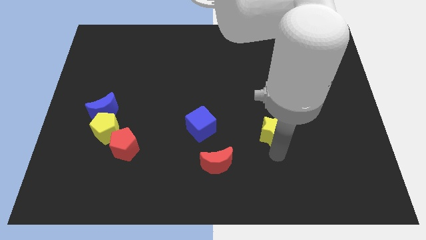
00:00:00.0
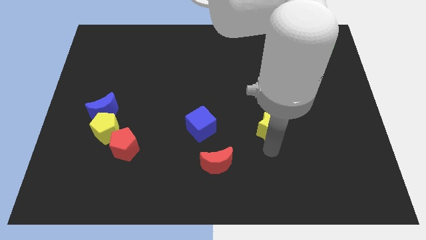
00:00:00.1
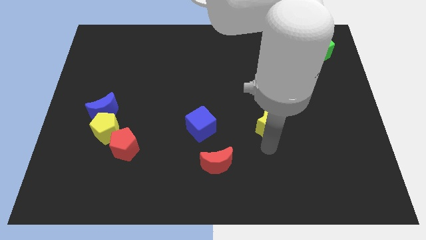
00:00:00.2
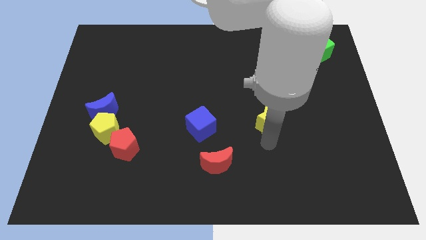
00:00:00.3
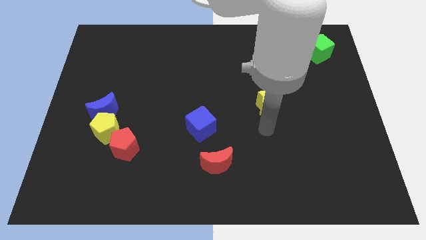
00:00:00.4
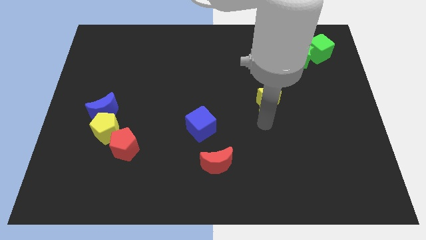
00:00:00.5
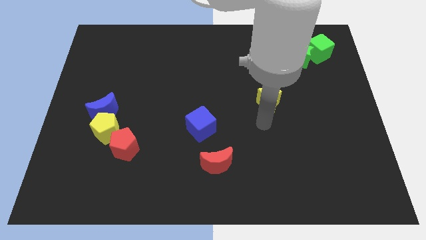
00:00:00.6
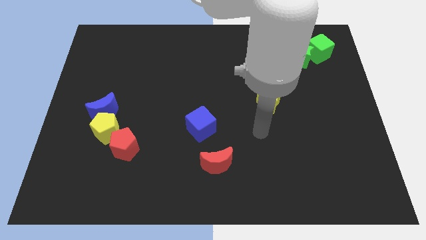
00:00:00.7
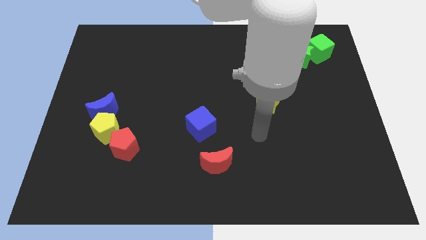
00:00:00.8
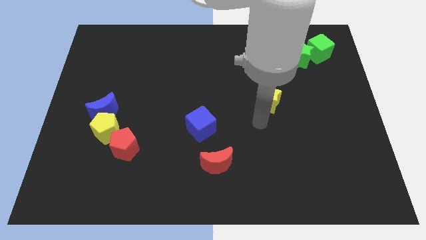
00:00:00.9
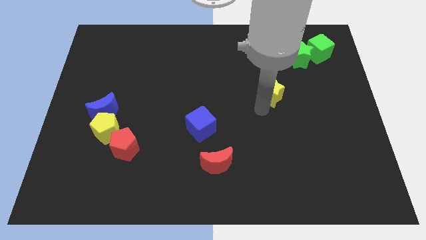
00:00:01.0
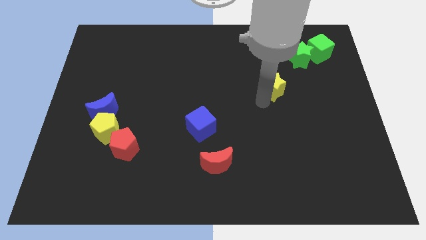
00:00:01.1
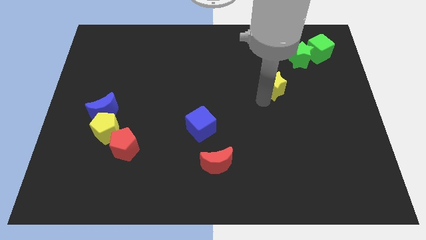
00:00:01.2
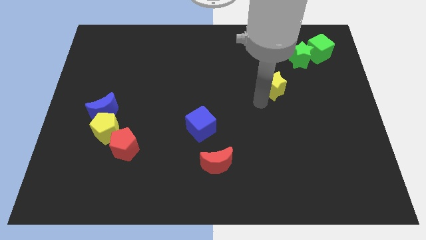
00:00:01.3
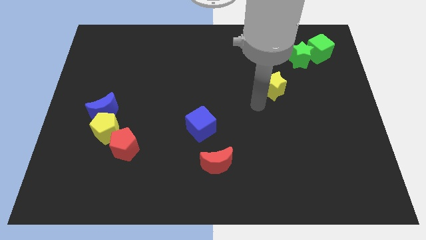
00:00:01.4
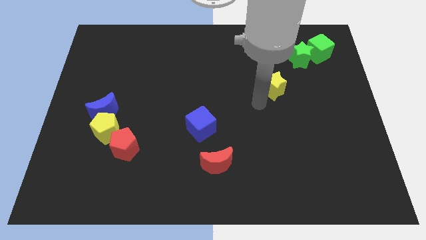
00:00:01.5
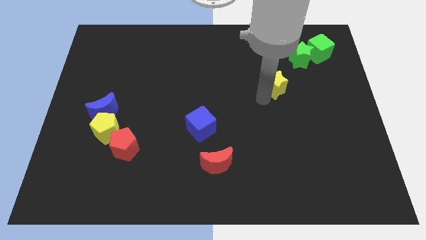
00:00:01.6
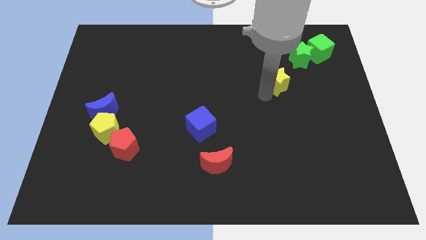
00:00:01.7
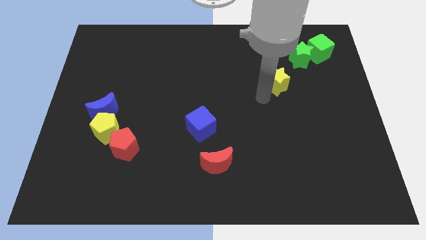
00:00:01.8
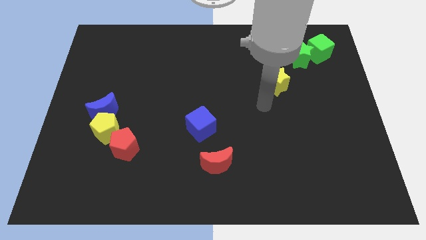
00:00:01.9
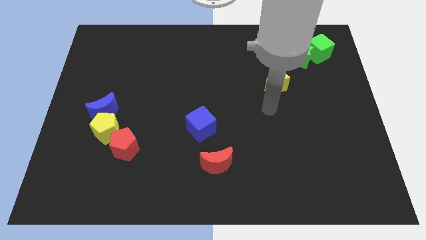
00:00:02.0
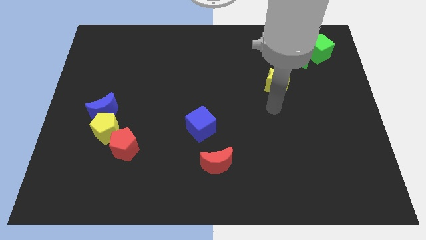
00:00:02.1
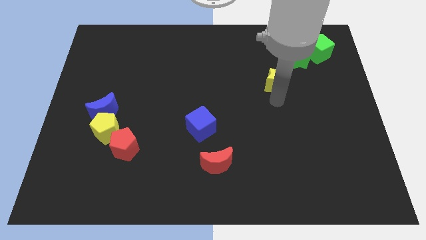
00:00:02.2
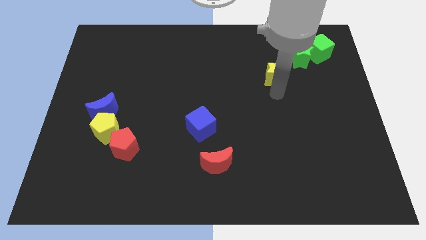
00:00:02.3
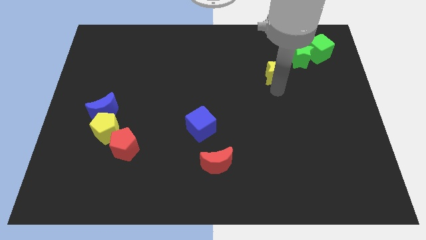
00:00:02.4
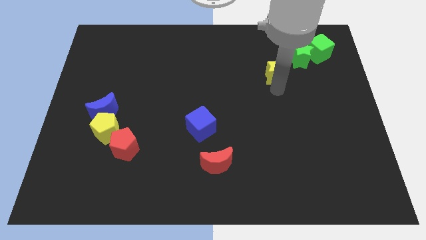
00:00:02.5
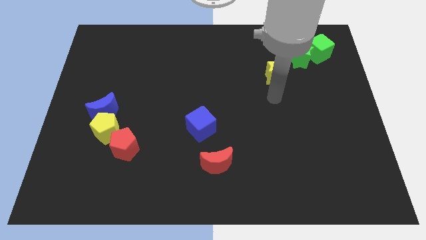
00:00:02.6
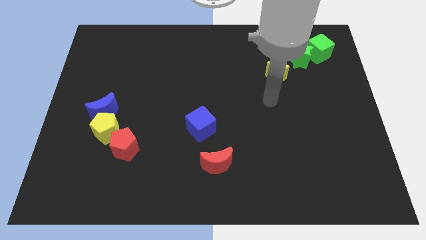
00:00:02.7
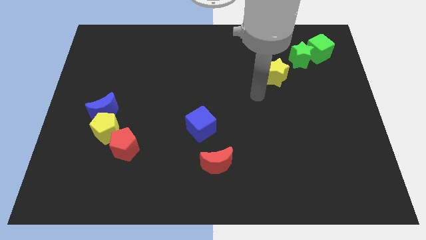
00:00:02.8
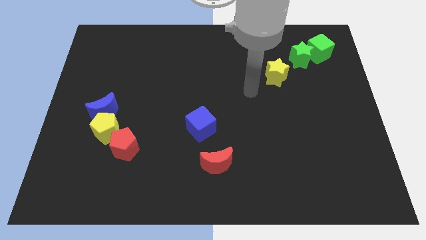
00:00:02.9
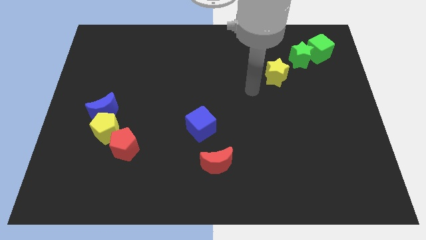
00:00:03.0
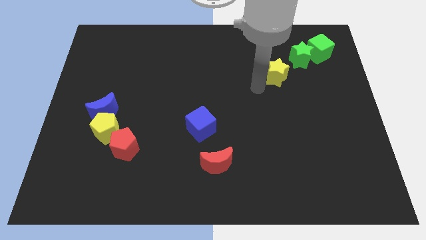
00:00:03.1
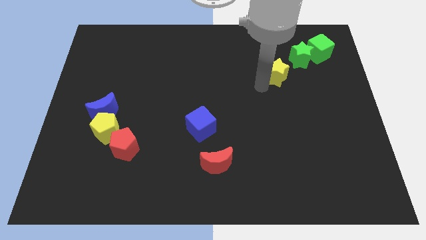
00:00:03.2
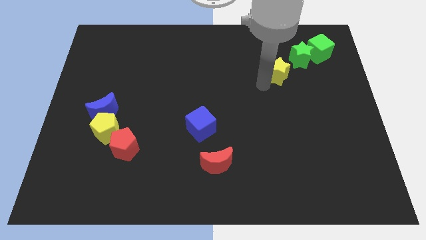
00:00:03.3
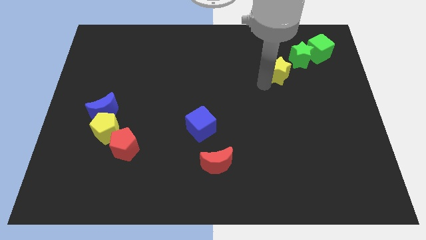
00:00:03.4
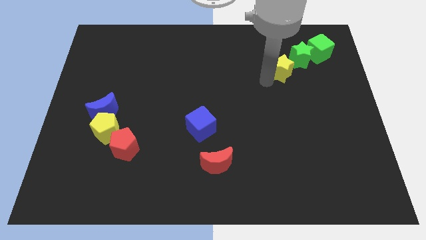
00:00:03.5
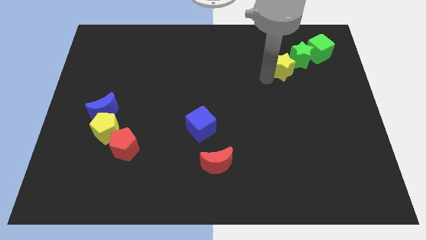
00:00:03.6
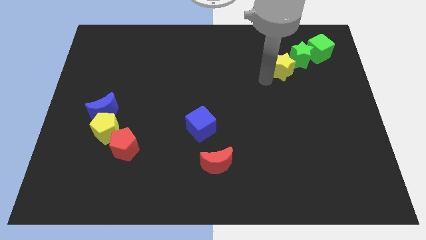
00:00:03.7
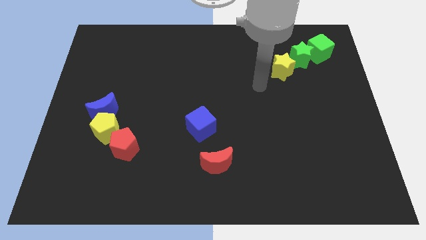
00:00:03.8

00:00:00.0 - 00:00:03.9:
push the yellow star close to the green star

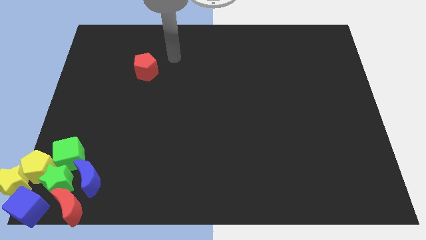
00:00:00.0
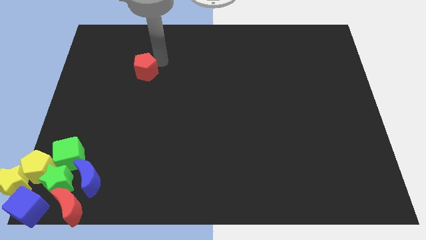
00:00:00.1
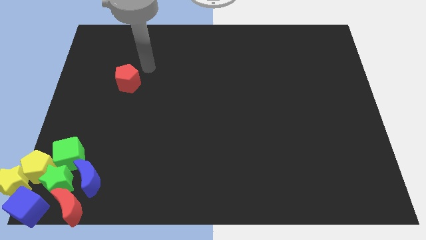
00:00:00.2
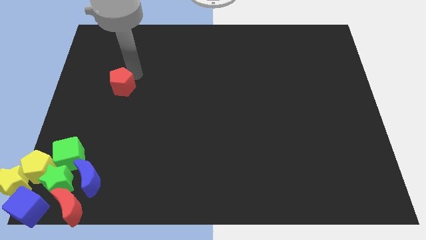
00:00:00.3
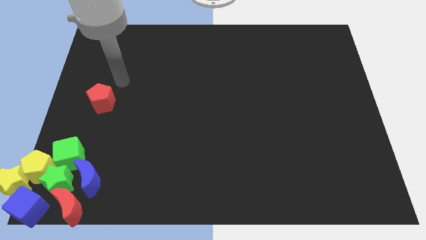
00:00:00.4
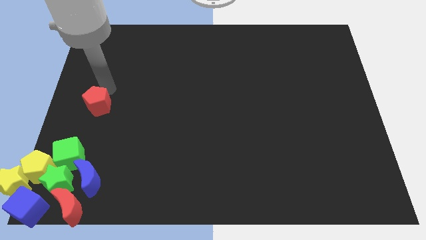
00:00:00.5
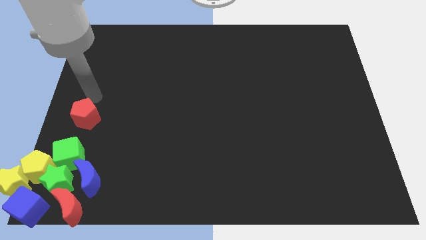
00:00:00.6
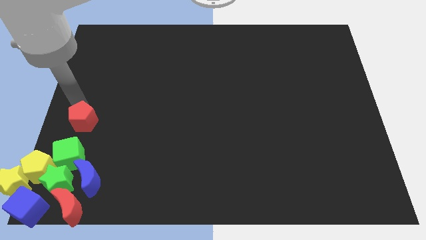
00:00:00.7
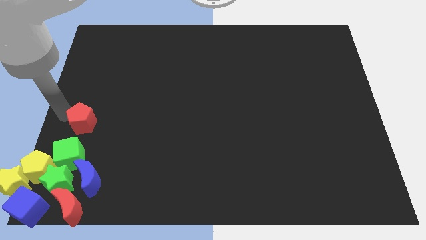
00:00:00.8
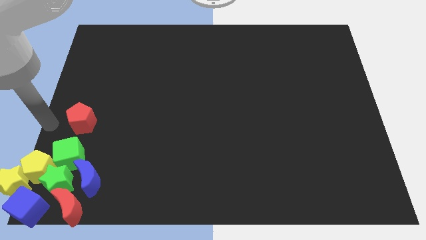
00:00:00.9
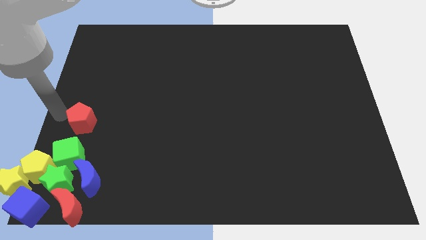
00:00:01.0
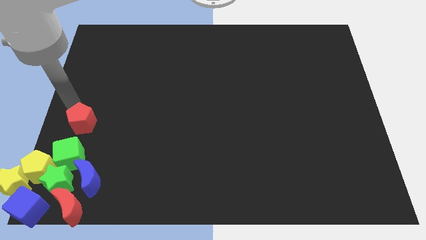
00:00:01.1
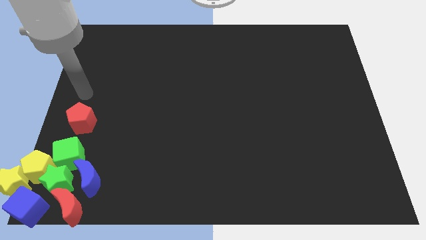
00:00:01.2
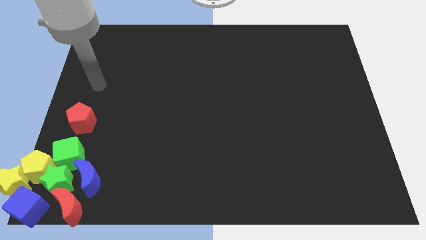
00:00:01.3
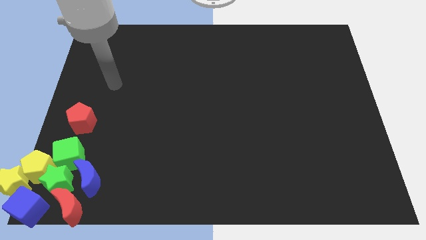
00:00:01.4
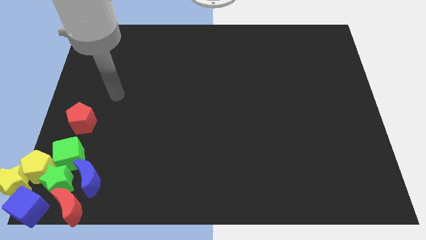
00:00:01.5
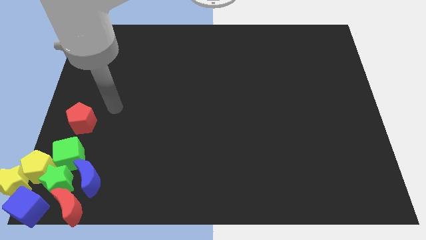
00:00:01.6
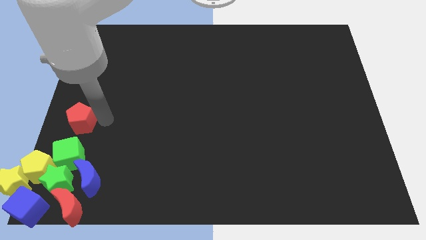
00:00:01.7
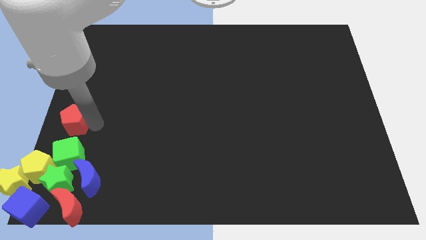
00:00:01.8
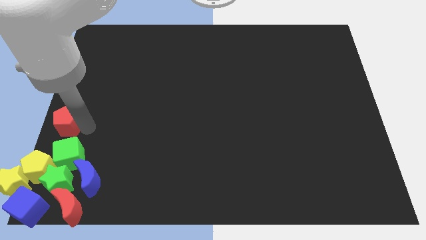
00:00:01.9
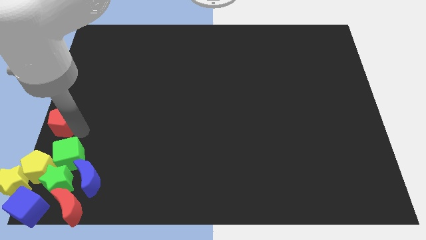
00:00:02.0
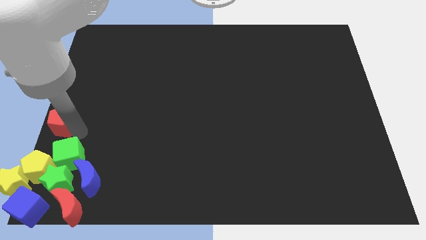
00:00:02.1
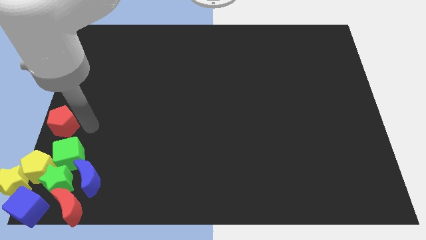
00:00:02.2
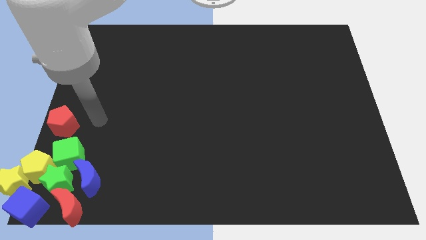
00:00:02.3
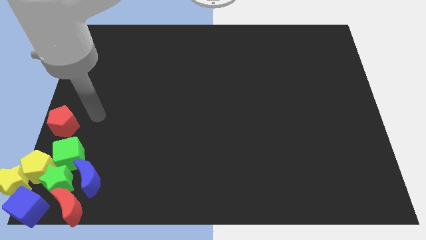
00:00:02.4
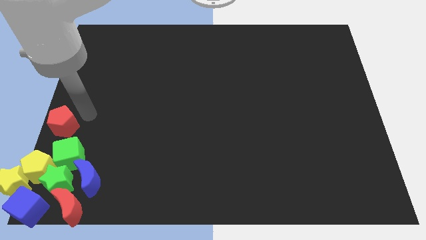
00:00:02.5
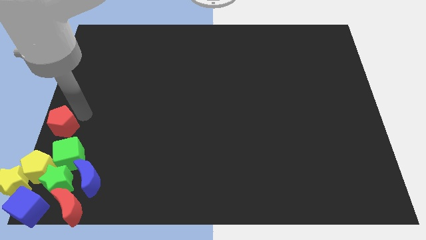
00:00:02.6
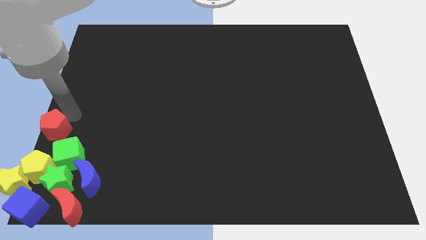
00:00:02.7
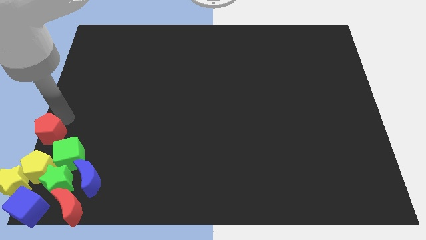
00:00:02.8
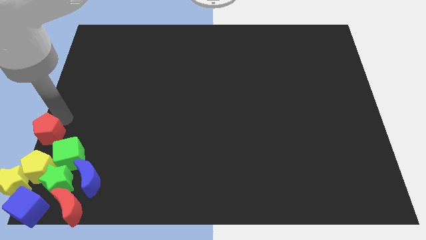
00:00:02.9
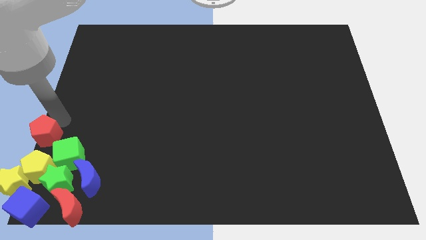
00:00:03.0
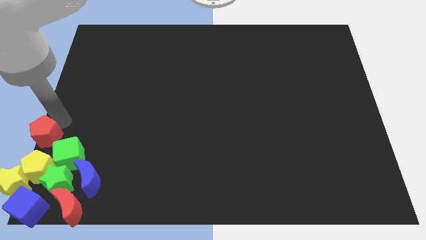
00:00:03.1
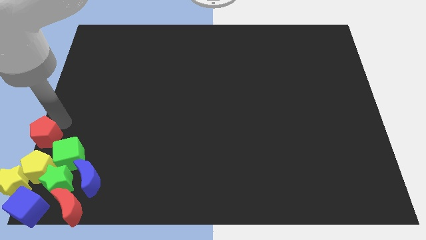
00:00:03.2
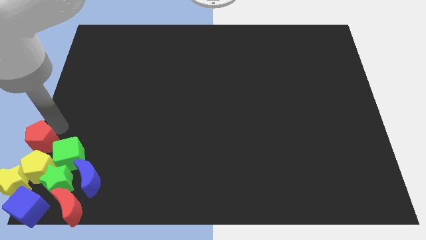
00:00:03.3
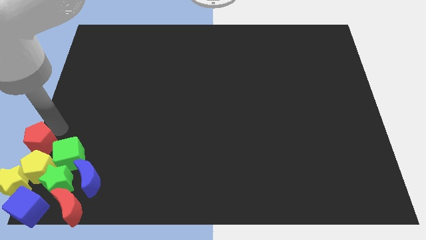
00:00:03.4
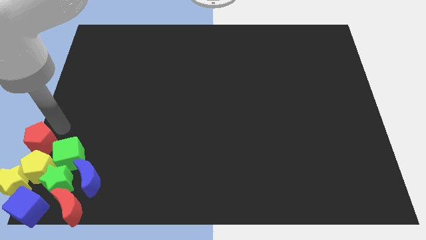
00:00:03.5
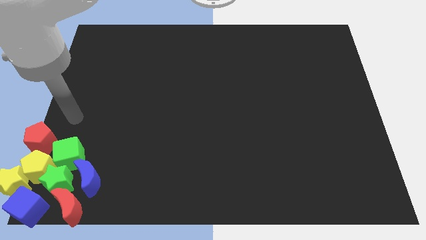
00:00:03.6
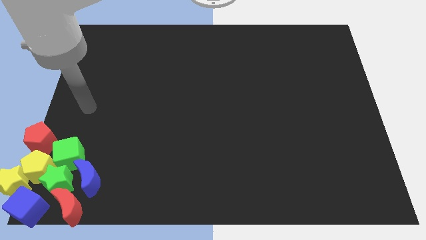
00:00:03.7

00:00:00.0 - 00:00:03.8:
move the red pentagon at the top of the yellow pentagon

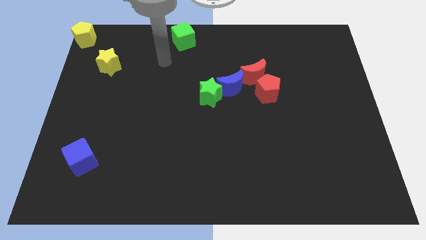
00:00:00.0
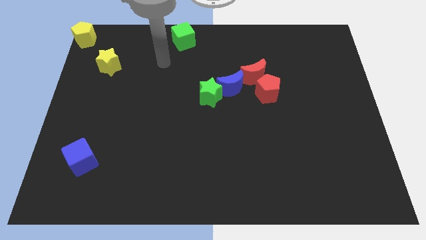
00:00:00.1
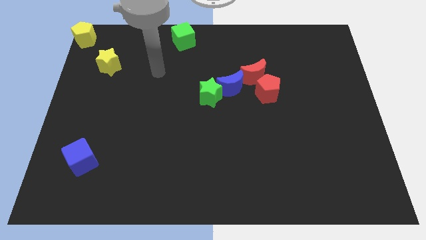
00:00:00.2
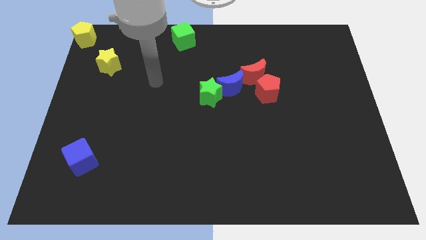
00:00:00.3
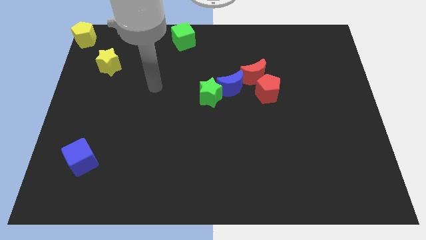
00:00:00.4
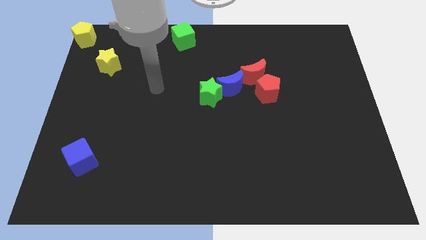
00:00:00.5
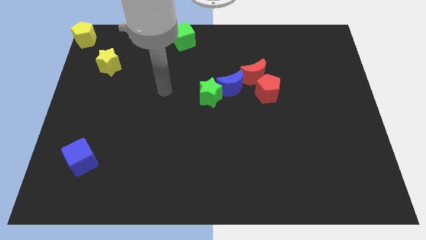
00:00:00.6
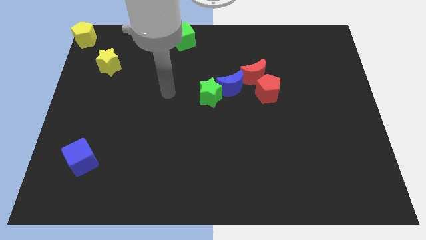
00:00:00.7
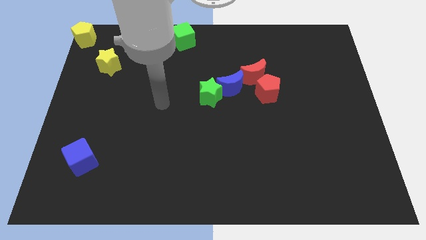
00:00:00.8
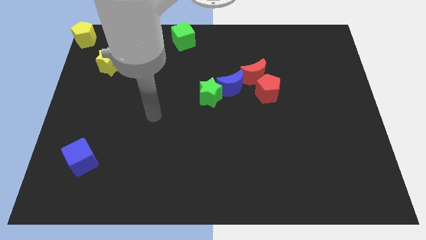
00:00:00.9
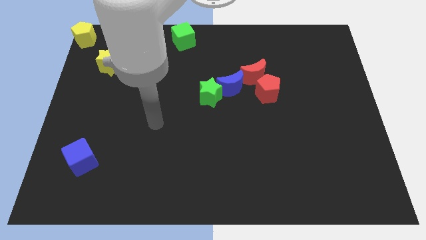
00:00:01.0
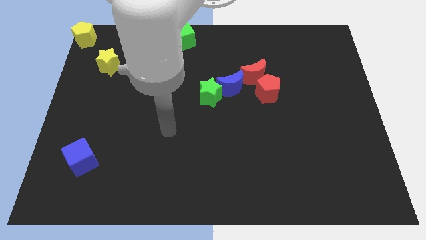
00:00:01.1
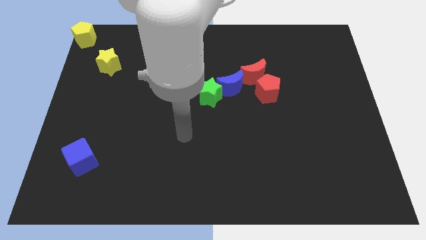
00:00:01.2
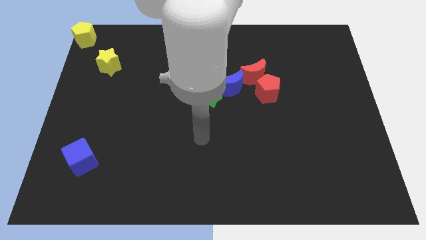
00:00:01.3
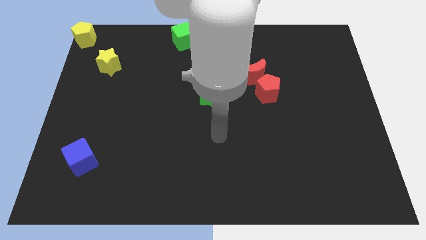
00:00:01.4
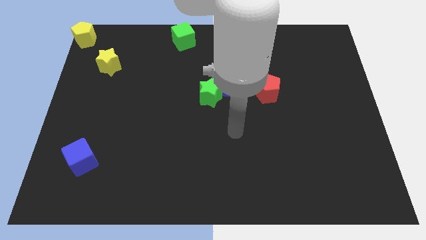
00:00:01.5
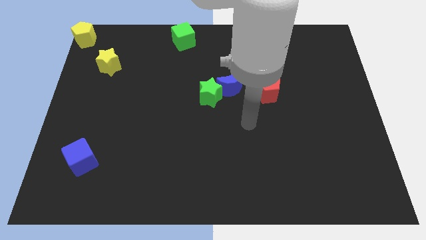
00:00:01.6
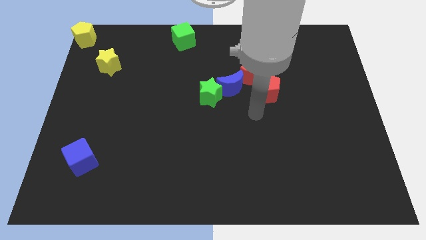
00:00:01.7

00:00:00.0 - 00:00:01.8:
move arm below the red pentagon
